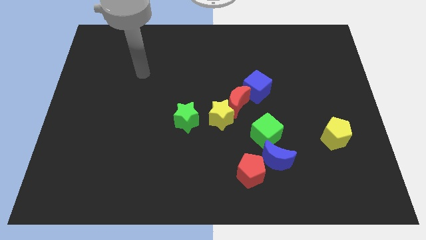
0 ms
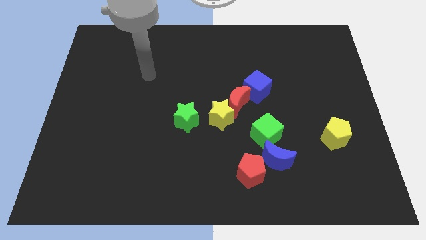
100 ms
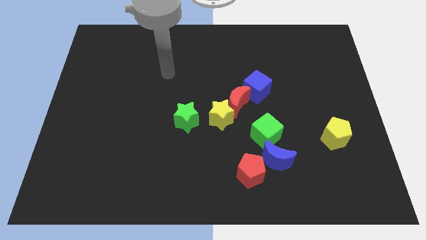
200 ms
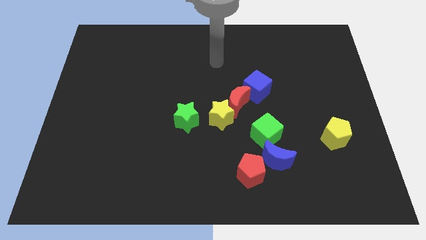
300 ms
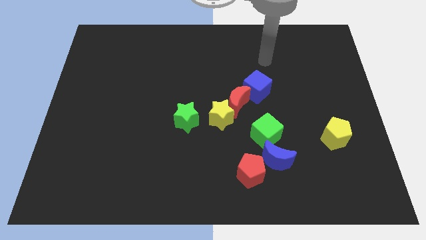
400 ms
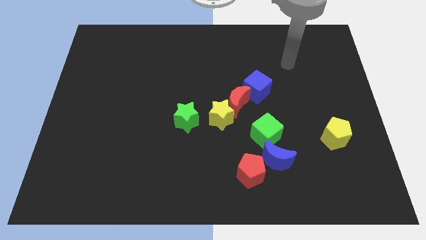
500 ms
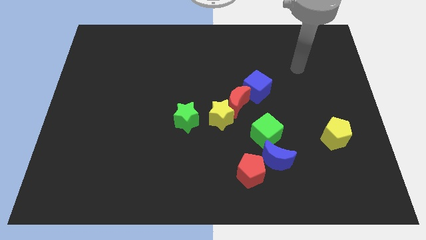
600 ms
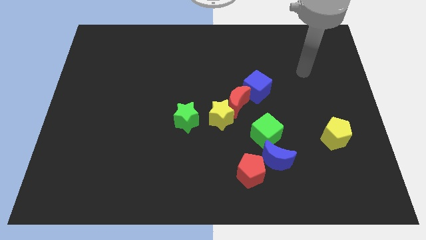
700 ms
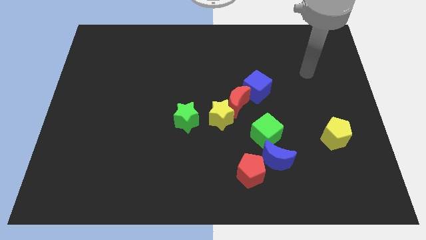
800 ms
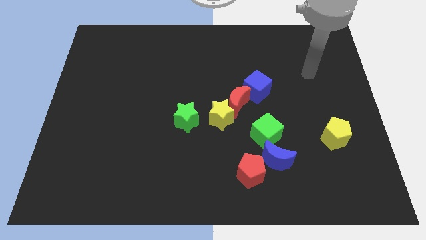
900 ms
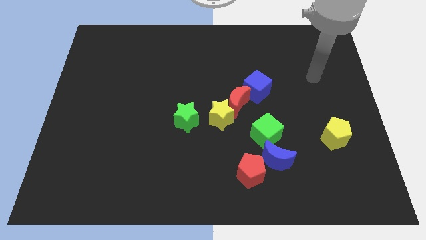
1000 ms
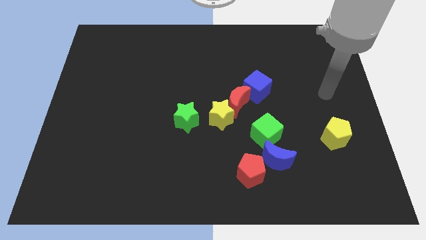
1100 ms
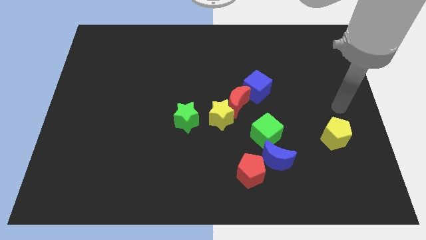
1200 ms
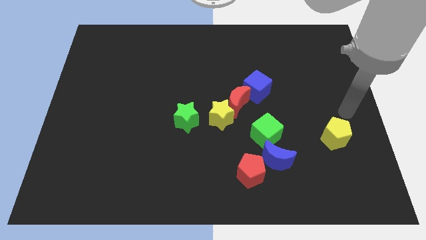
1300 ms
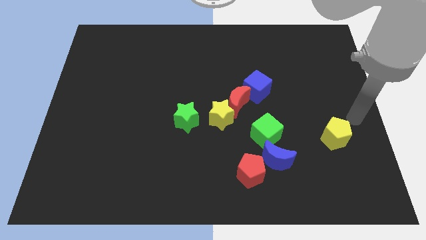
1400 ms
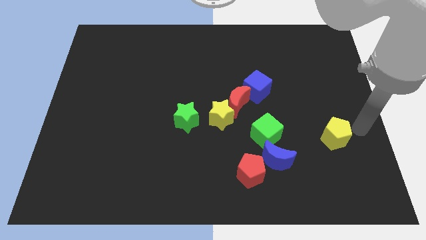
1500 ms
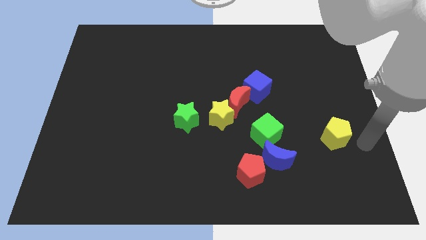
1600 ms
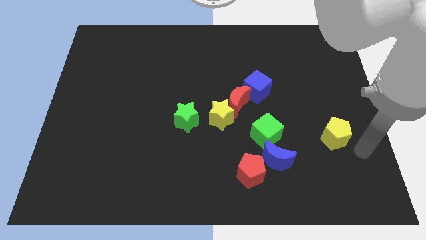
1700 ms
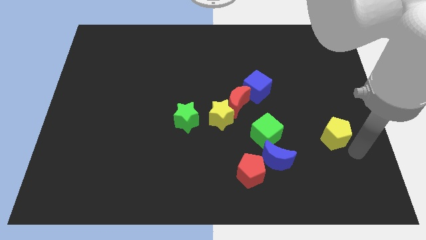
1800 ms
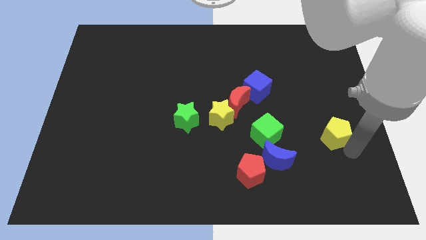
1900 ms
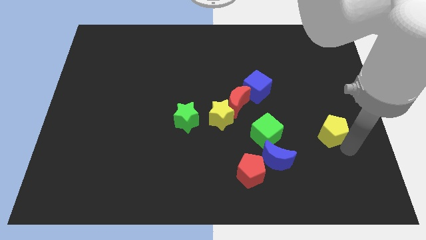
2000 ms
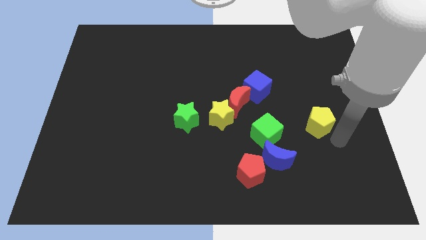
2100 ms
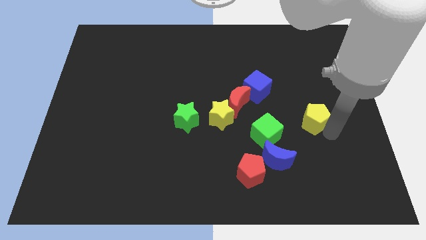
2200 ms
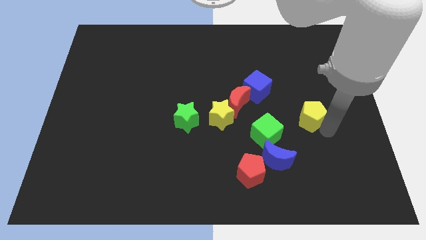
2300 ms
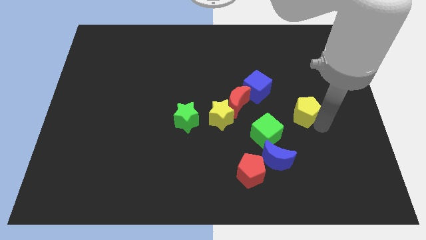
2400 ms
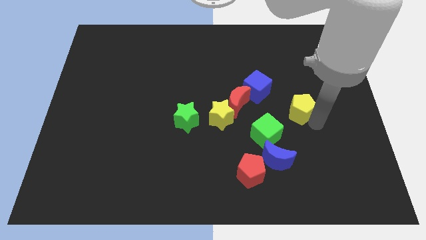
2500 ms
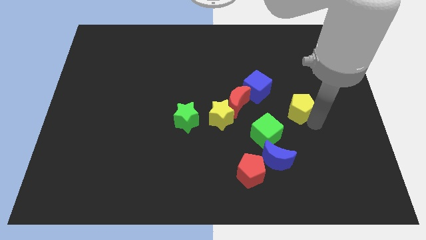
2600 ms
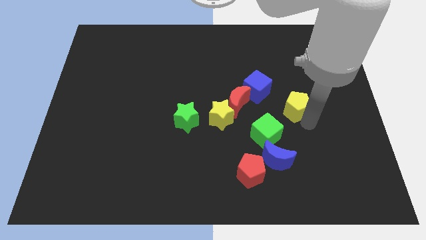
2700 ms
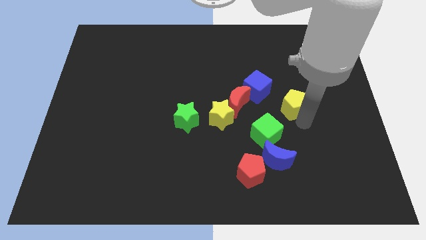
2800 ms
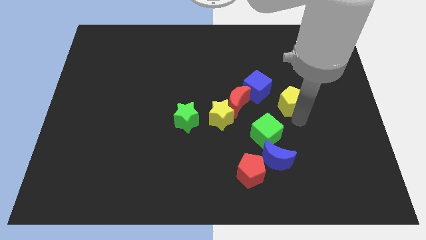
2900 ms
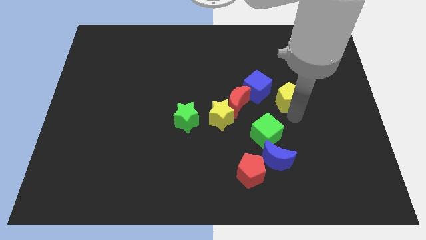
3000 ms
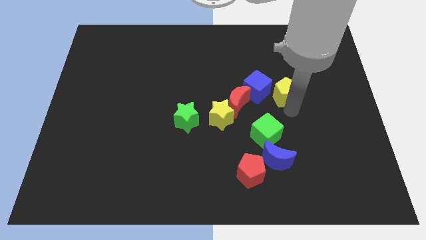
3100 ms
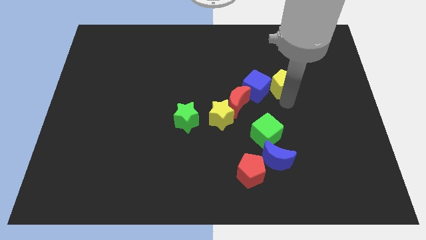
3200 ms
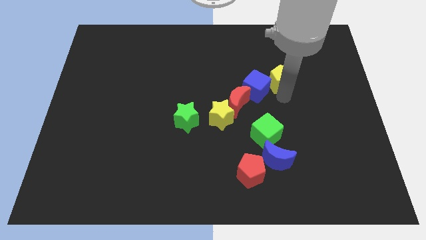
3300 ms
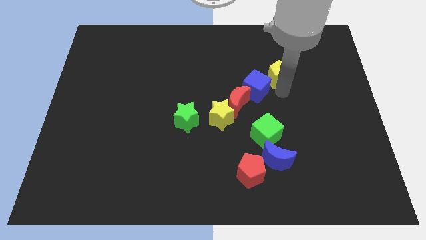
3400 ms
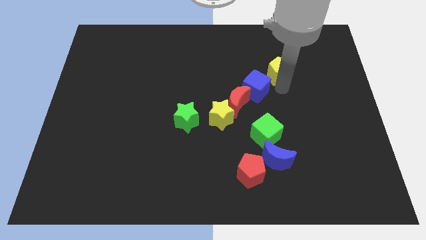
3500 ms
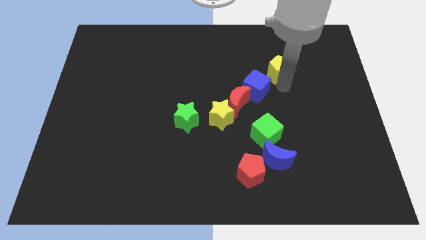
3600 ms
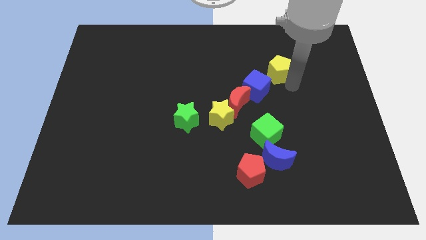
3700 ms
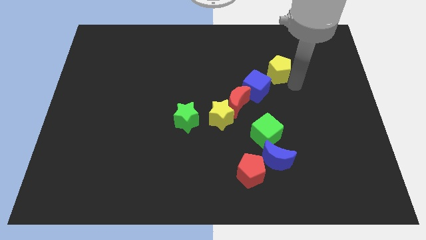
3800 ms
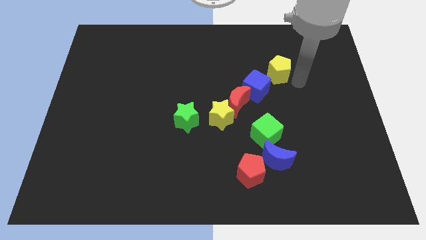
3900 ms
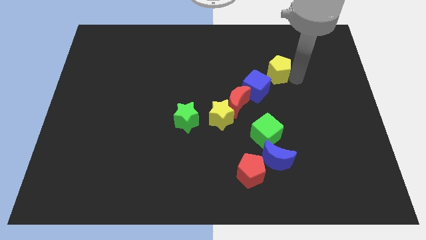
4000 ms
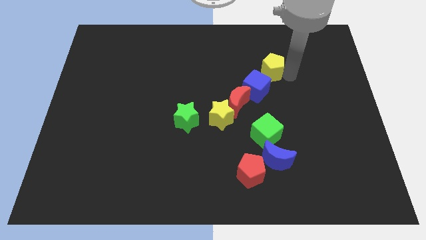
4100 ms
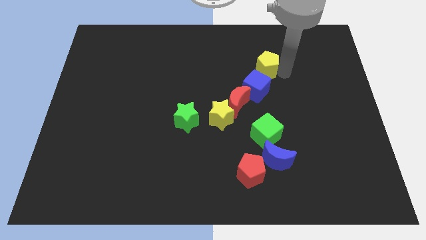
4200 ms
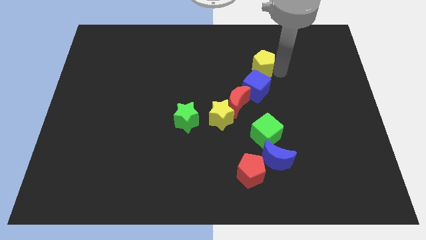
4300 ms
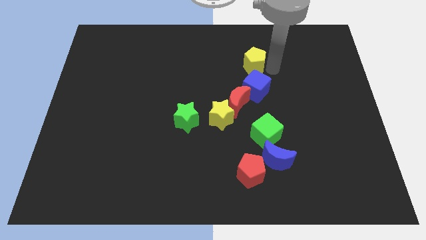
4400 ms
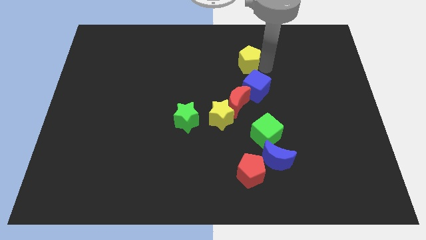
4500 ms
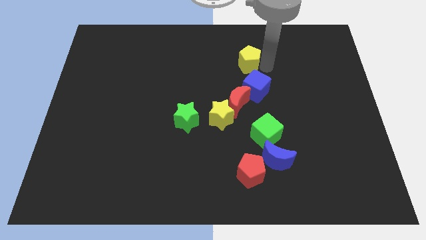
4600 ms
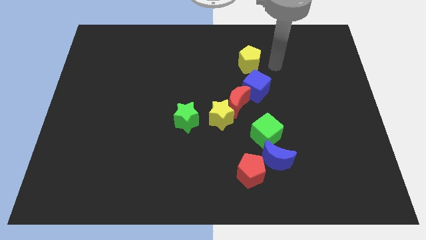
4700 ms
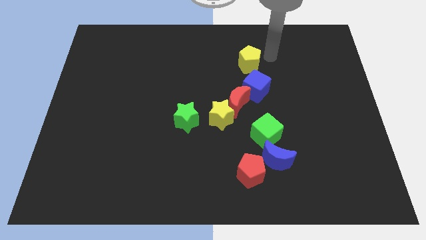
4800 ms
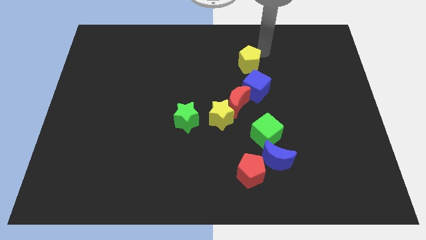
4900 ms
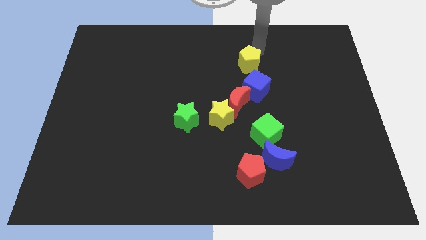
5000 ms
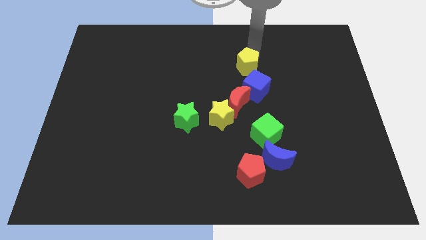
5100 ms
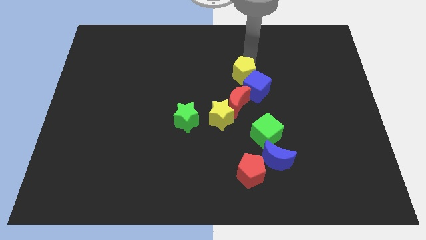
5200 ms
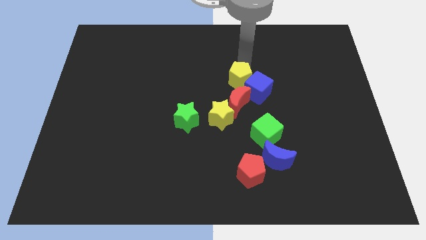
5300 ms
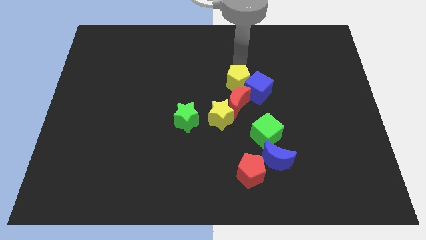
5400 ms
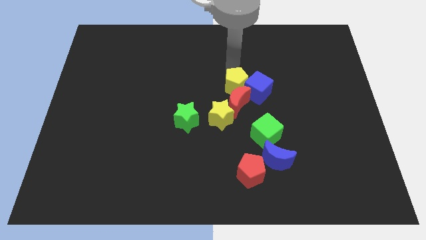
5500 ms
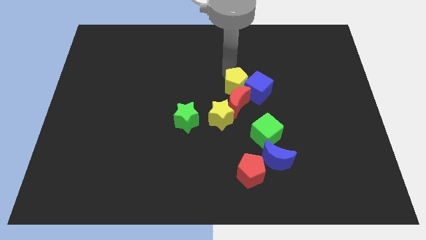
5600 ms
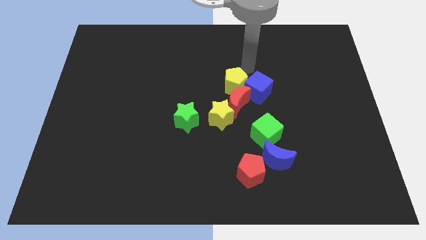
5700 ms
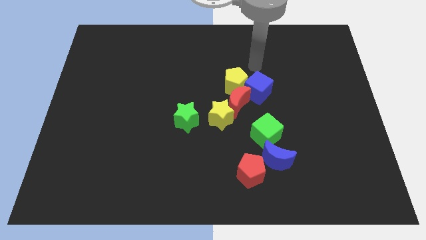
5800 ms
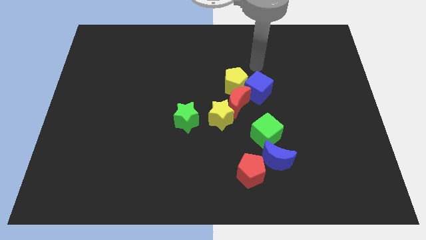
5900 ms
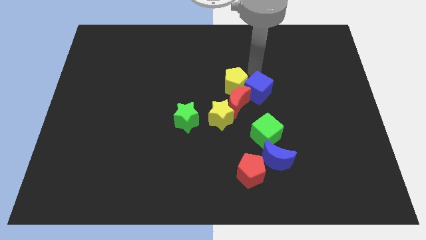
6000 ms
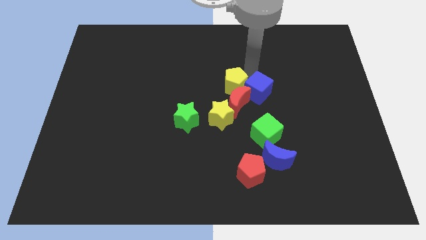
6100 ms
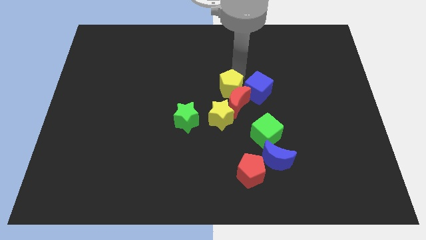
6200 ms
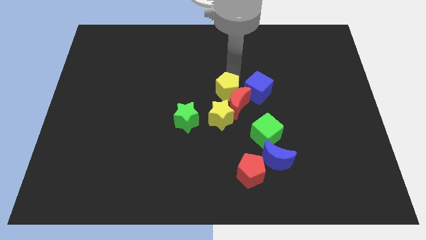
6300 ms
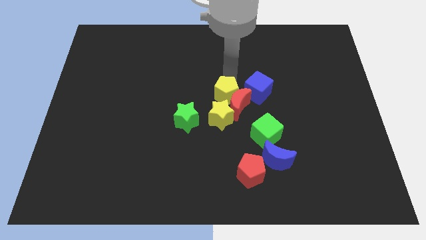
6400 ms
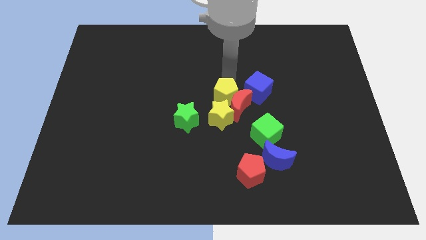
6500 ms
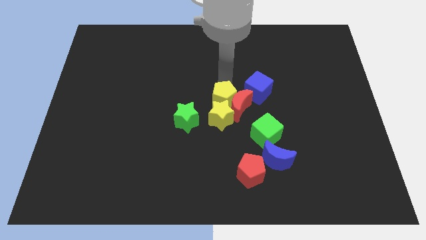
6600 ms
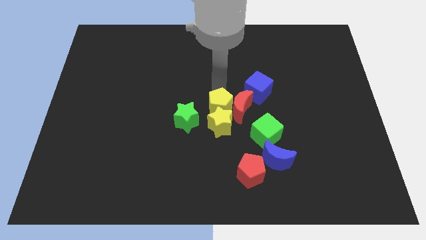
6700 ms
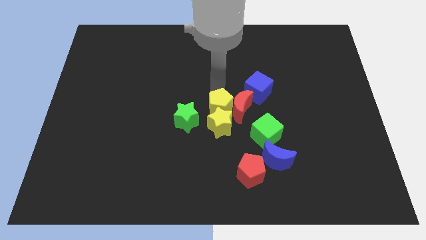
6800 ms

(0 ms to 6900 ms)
put the yellow pentagon towards the yellow star

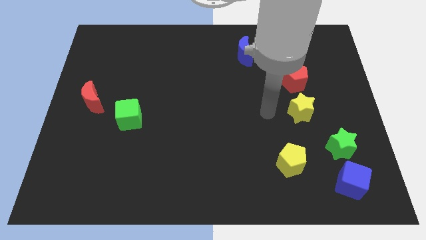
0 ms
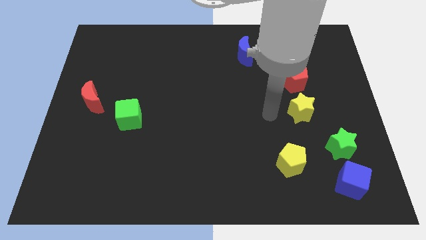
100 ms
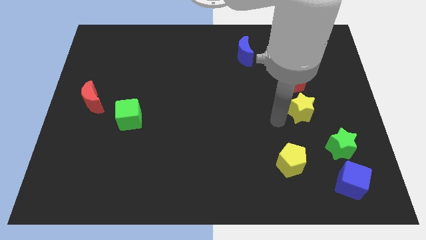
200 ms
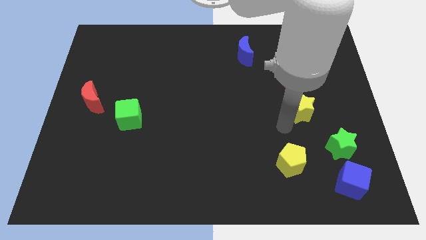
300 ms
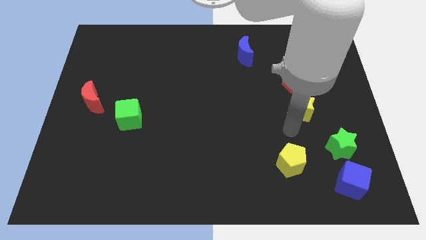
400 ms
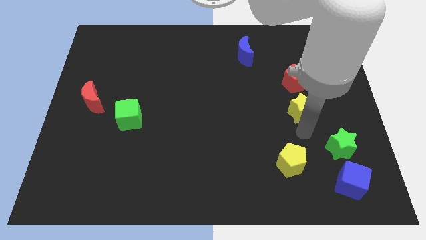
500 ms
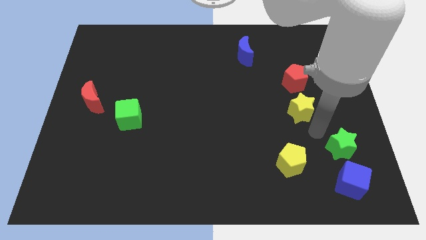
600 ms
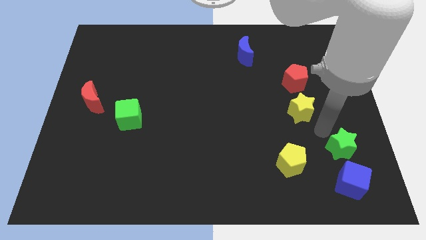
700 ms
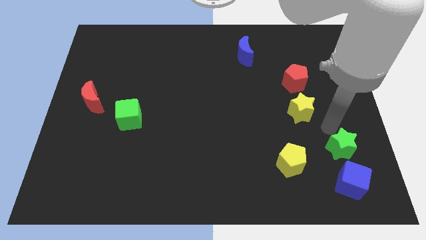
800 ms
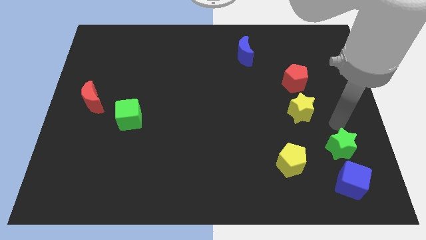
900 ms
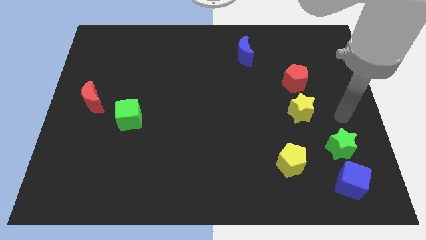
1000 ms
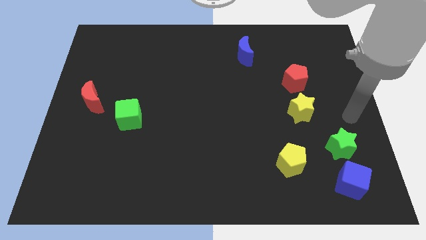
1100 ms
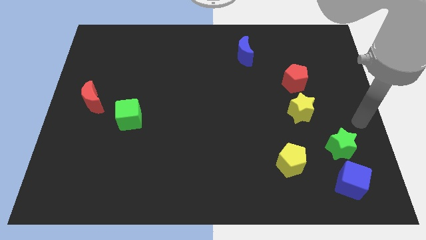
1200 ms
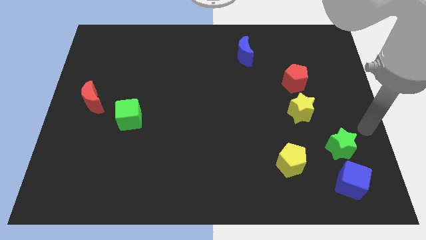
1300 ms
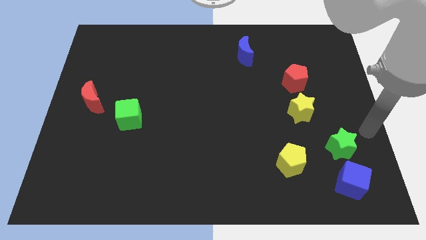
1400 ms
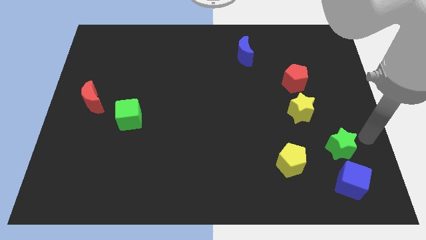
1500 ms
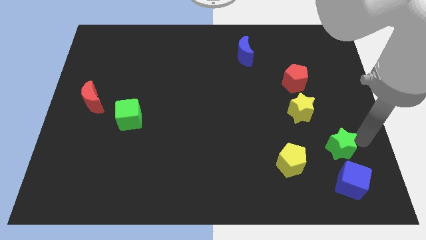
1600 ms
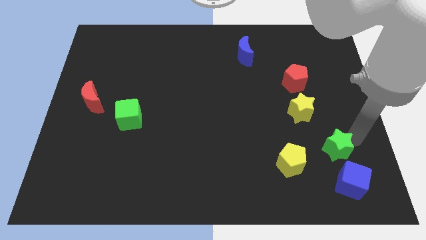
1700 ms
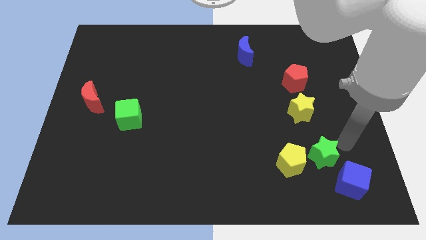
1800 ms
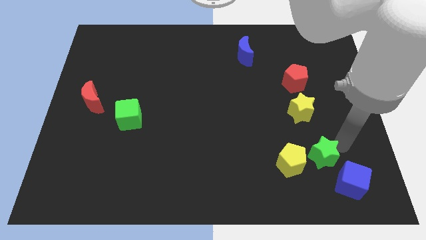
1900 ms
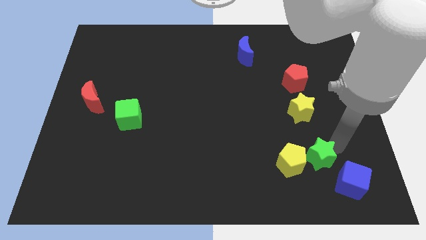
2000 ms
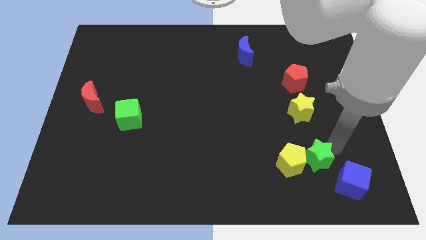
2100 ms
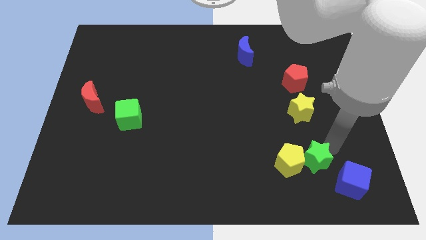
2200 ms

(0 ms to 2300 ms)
put the green star towards the yellow pentagon
